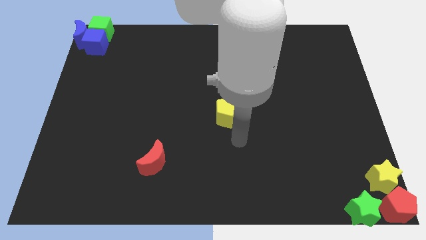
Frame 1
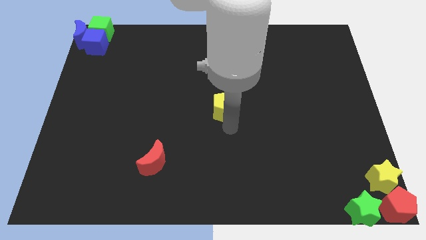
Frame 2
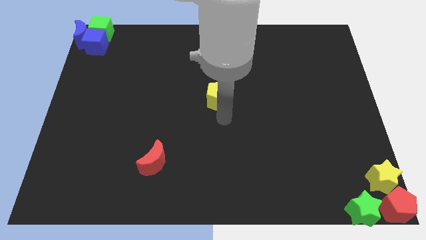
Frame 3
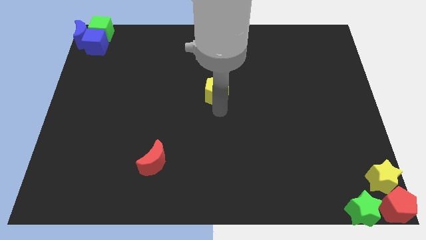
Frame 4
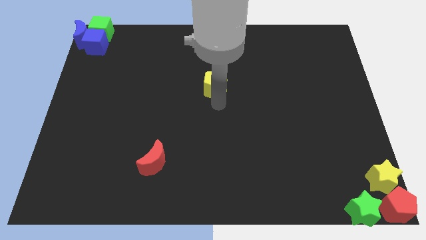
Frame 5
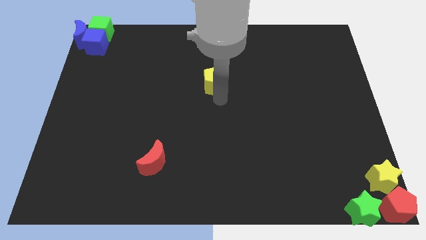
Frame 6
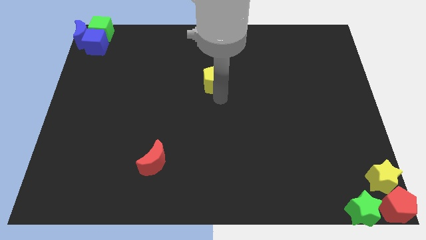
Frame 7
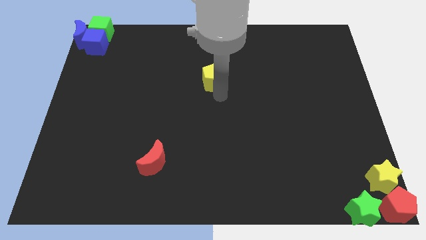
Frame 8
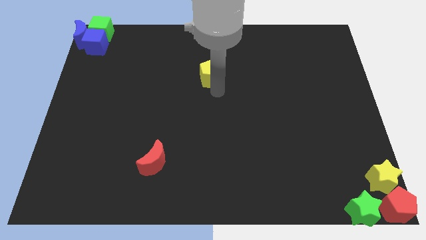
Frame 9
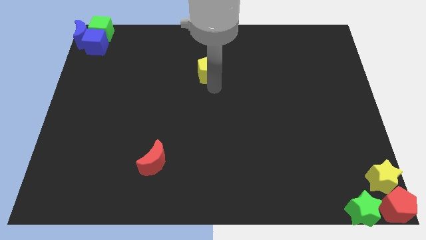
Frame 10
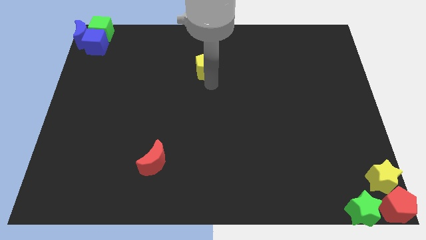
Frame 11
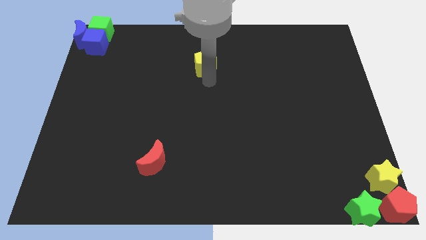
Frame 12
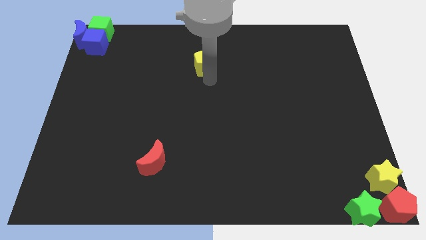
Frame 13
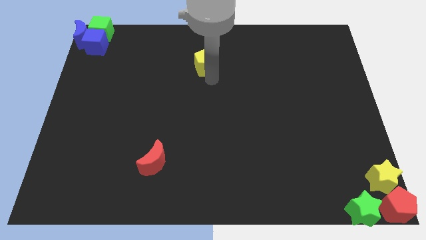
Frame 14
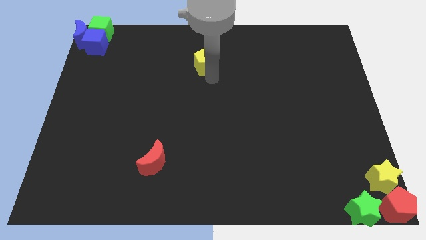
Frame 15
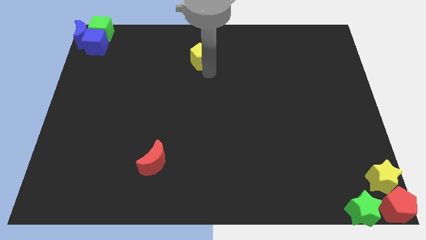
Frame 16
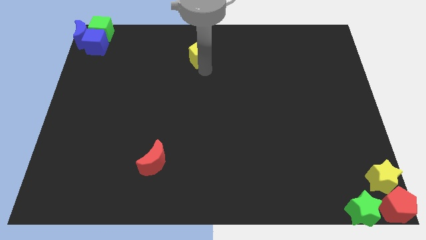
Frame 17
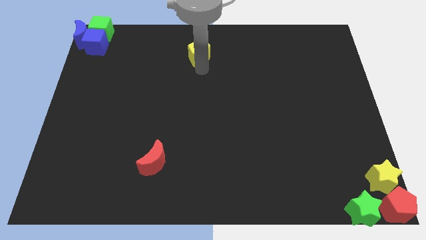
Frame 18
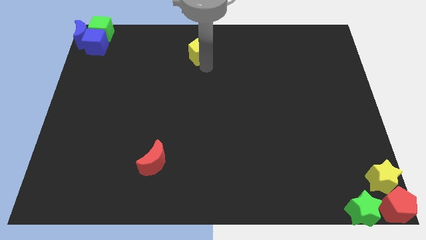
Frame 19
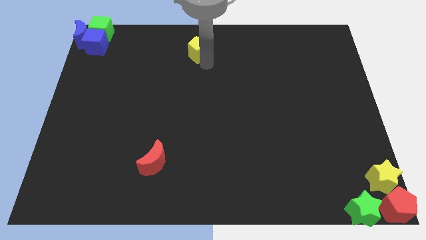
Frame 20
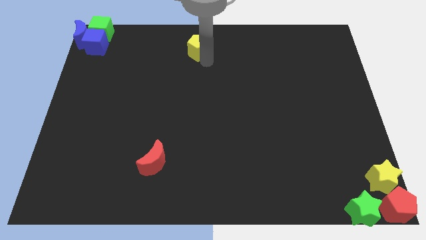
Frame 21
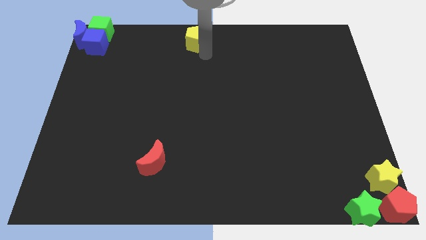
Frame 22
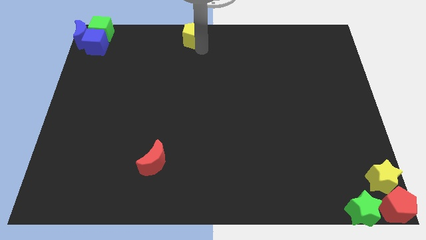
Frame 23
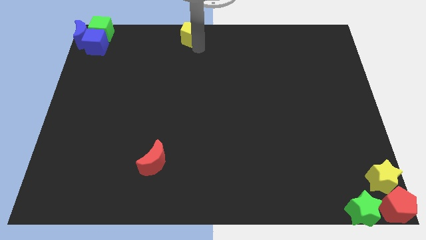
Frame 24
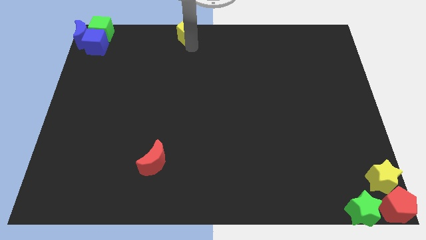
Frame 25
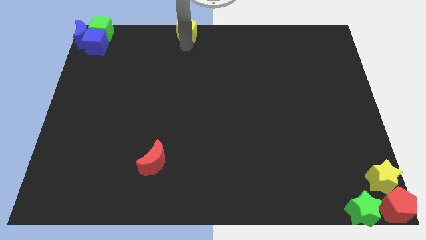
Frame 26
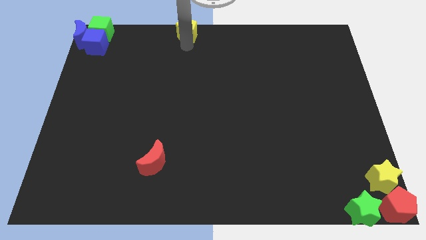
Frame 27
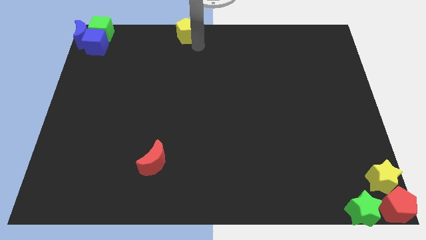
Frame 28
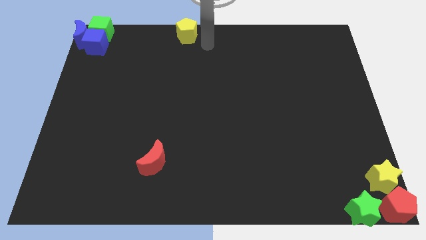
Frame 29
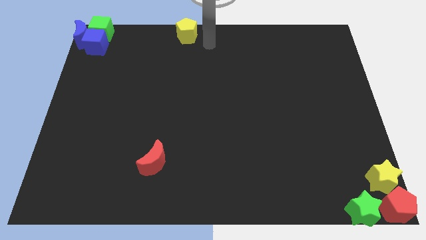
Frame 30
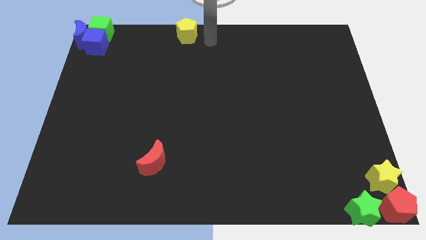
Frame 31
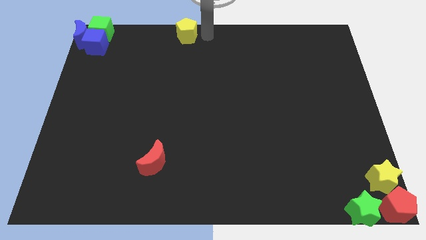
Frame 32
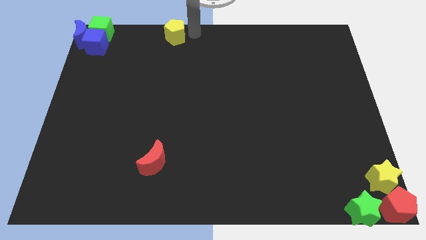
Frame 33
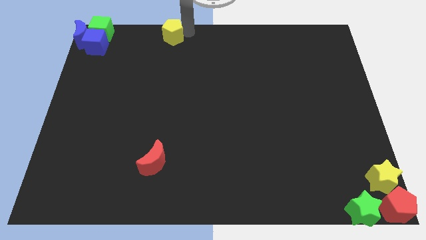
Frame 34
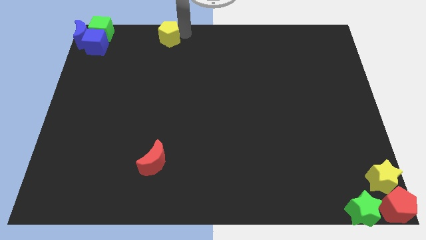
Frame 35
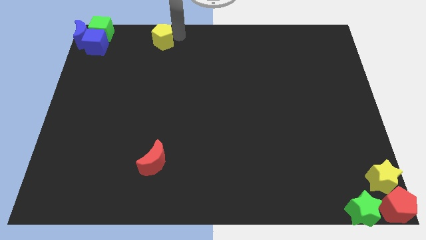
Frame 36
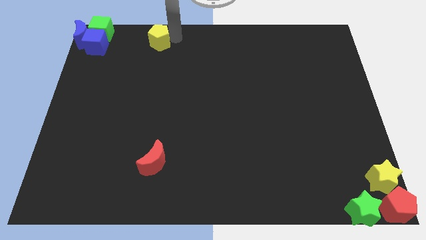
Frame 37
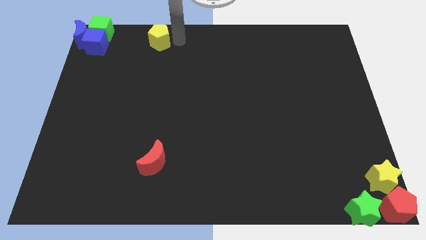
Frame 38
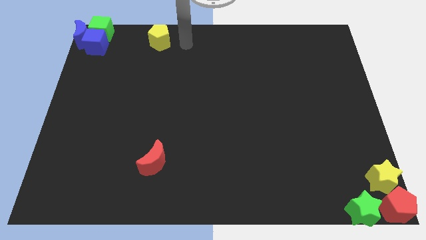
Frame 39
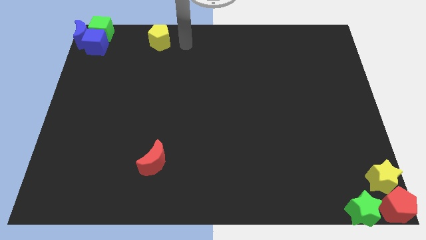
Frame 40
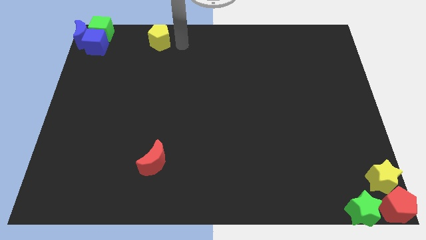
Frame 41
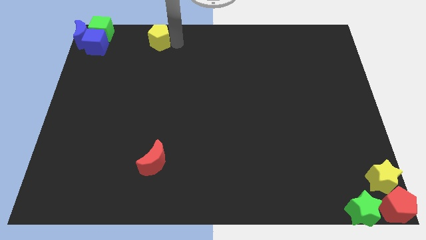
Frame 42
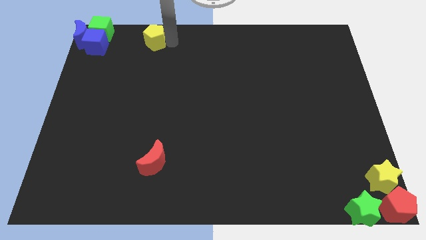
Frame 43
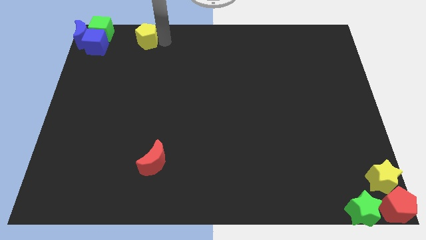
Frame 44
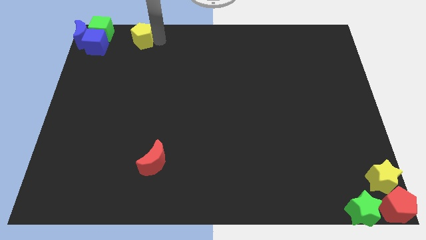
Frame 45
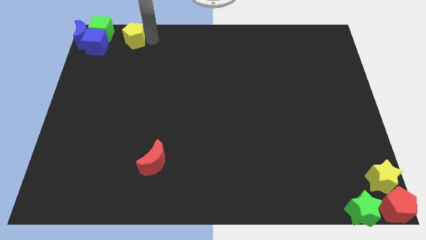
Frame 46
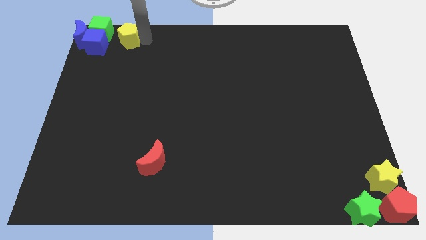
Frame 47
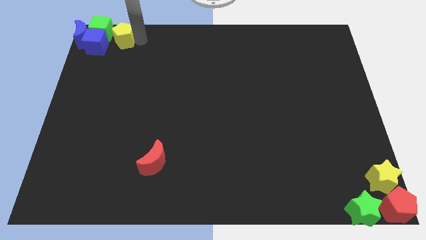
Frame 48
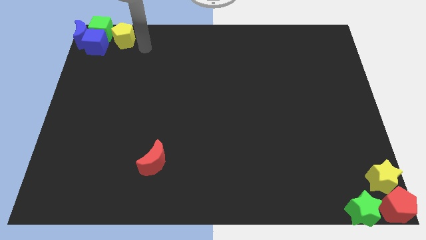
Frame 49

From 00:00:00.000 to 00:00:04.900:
place the yellow pentagon beside the green cube

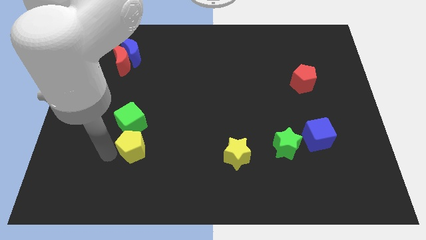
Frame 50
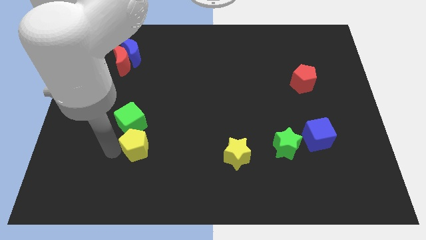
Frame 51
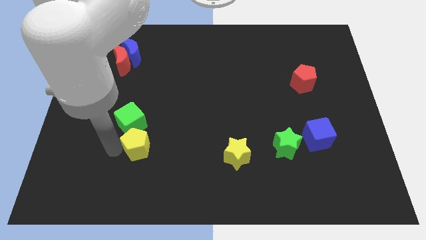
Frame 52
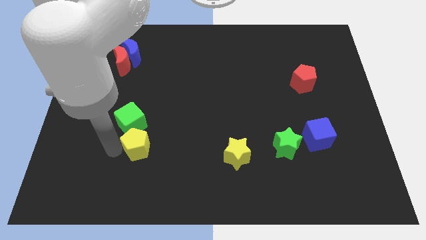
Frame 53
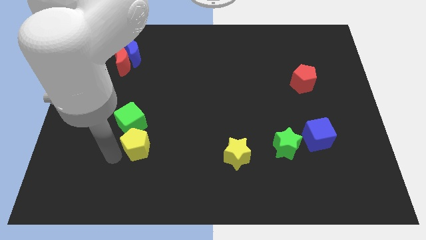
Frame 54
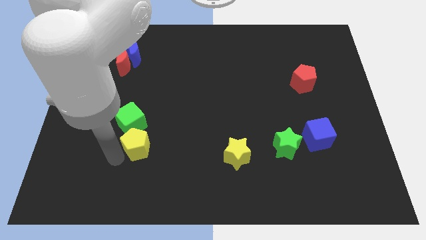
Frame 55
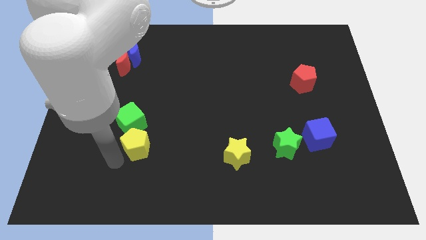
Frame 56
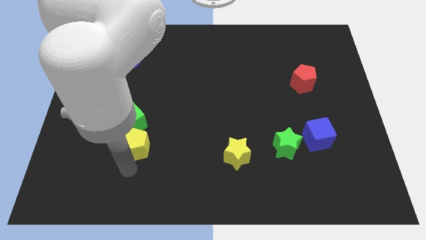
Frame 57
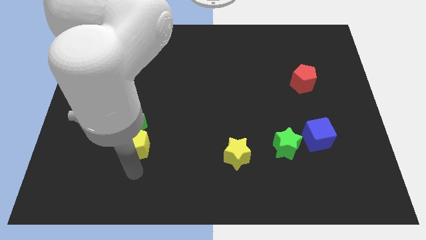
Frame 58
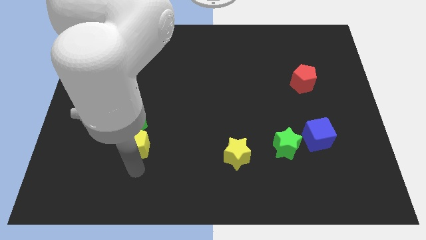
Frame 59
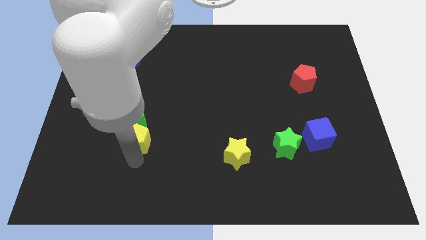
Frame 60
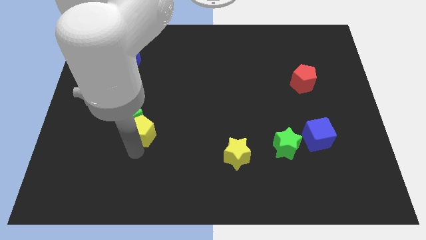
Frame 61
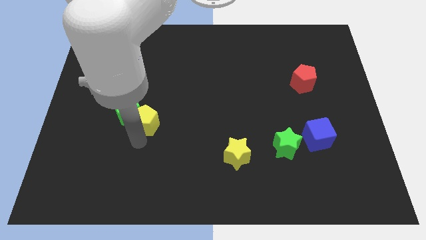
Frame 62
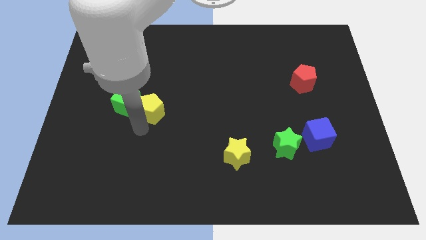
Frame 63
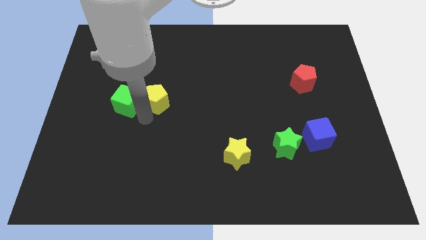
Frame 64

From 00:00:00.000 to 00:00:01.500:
slide the yellow pentagon to the right side of the green cube

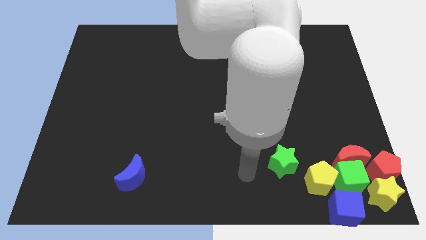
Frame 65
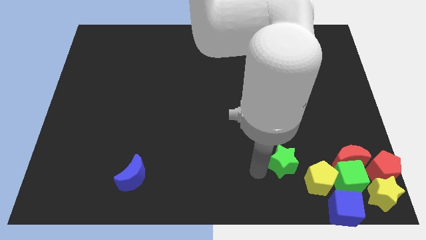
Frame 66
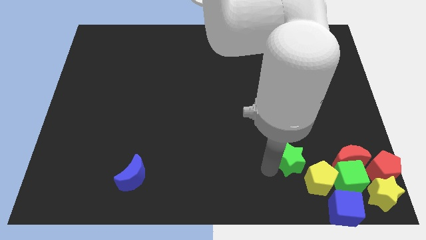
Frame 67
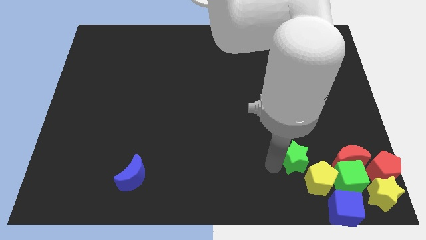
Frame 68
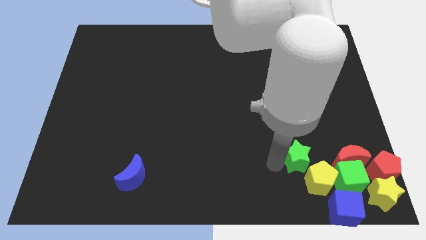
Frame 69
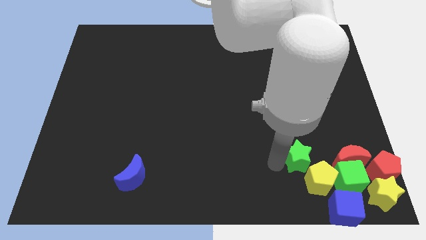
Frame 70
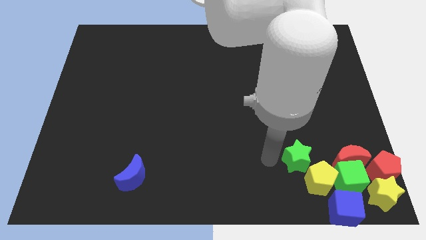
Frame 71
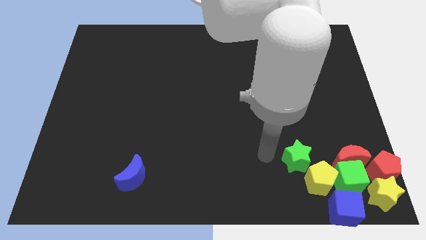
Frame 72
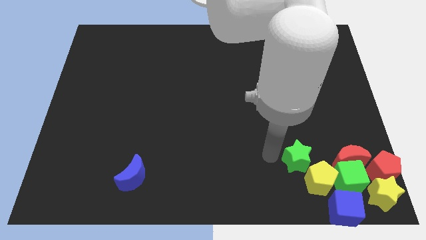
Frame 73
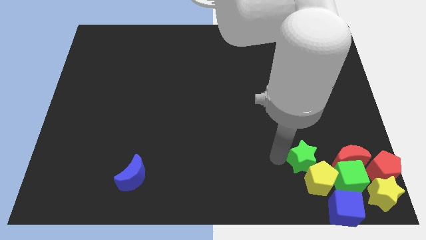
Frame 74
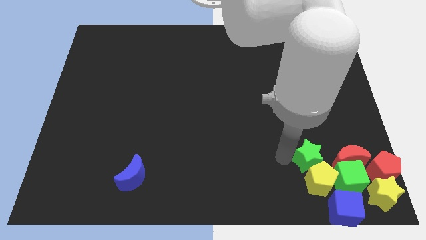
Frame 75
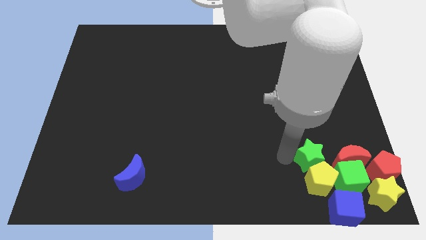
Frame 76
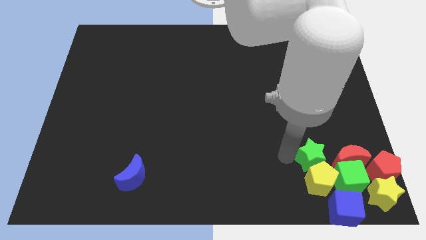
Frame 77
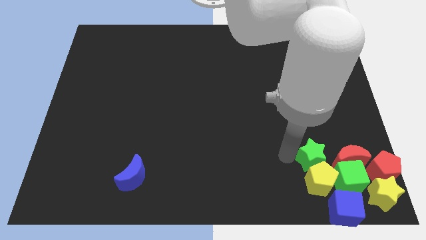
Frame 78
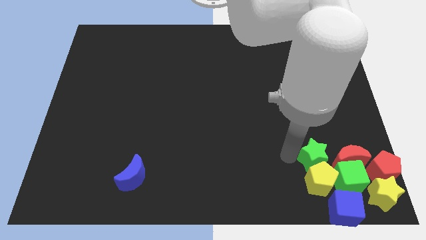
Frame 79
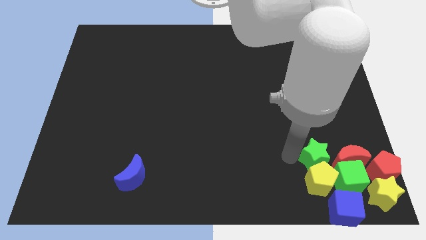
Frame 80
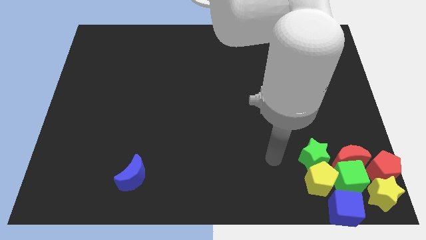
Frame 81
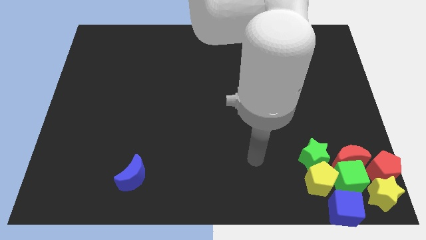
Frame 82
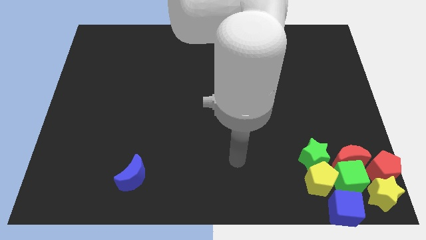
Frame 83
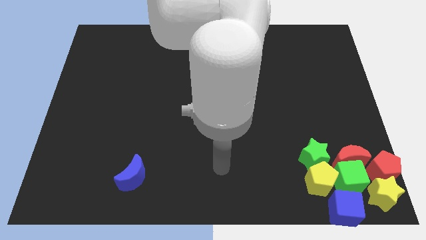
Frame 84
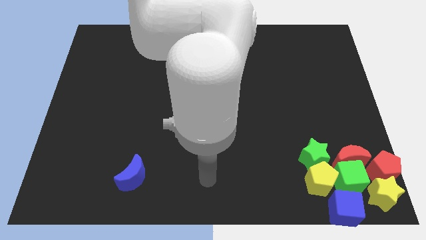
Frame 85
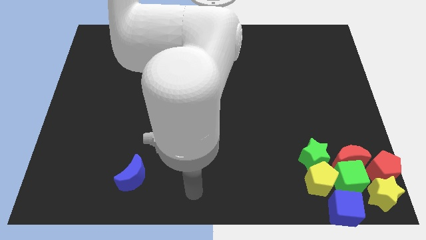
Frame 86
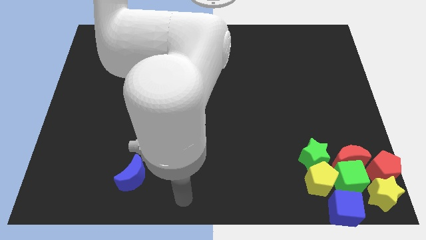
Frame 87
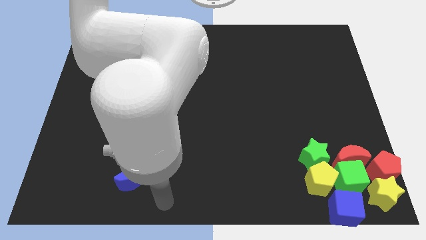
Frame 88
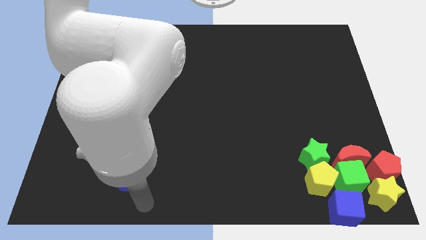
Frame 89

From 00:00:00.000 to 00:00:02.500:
move the green star above the yellow pentagon

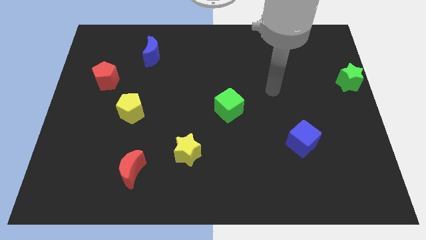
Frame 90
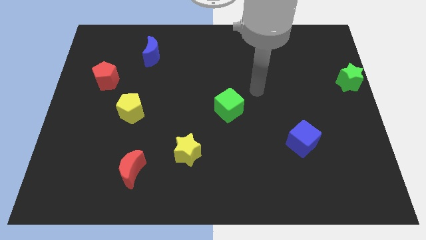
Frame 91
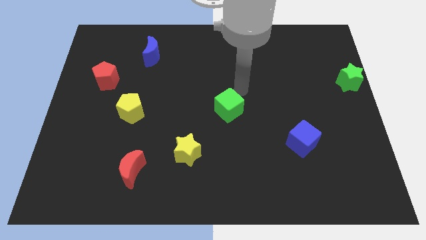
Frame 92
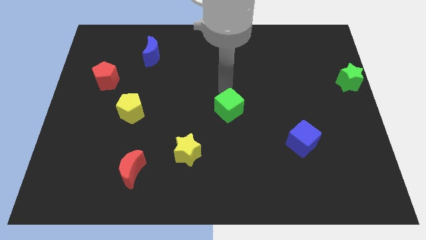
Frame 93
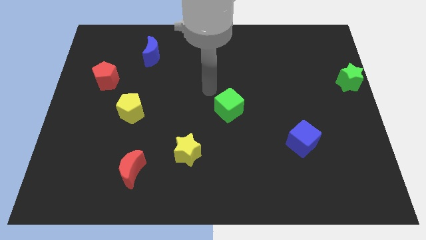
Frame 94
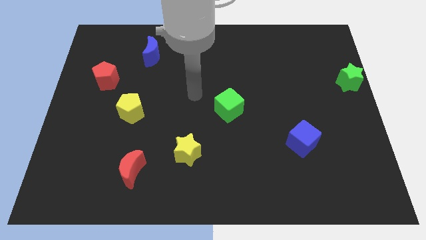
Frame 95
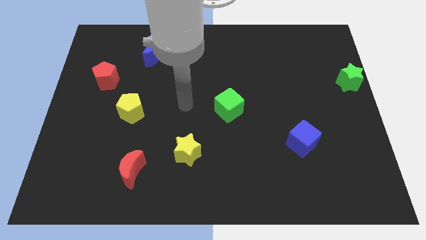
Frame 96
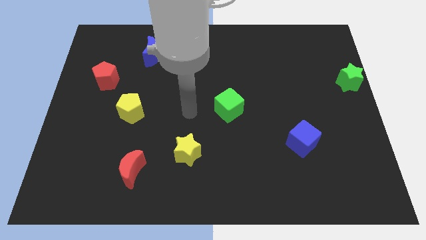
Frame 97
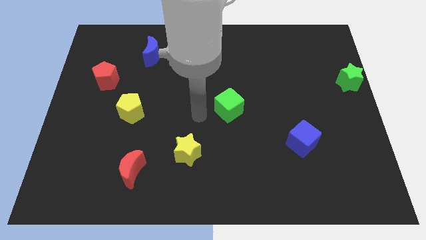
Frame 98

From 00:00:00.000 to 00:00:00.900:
move your arm to the left of the green cube
